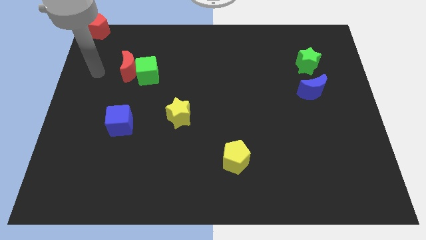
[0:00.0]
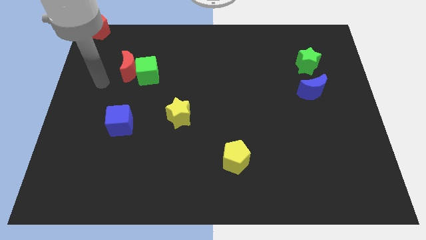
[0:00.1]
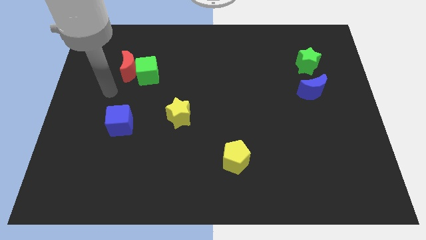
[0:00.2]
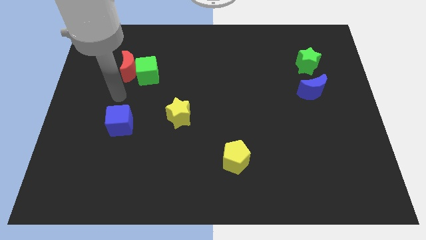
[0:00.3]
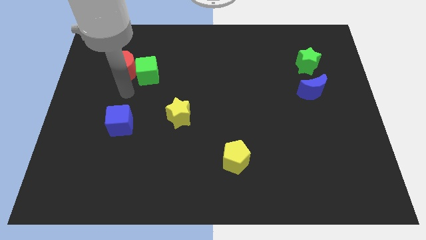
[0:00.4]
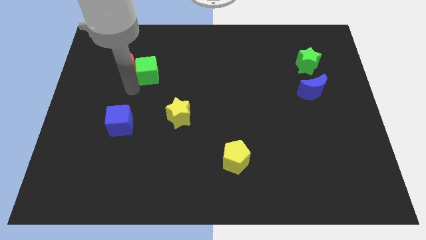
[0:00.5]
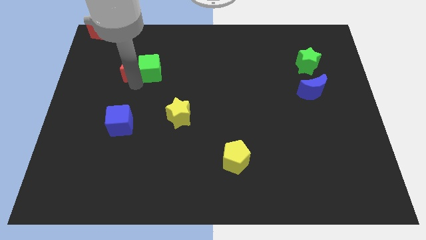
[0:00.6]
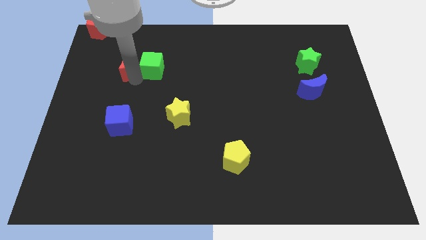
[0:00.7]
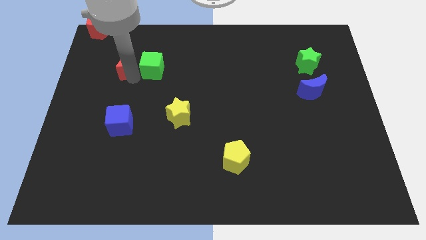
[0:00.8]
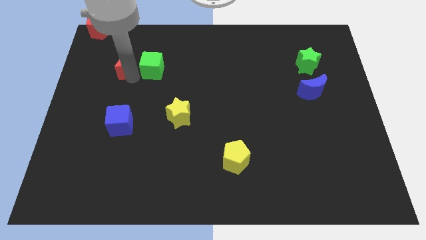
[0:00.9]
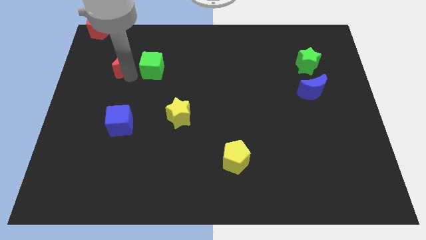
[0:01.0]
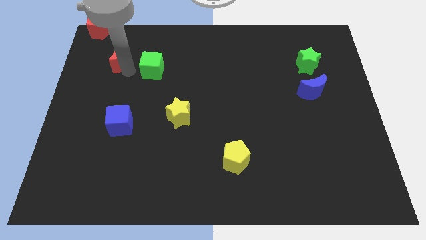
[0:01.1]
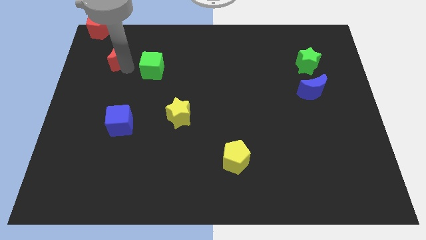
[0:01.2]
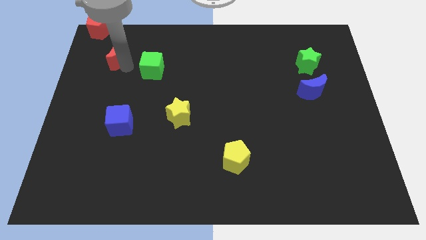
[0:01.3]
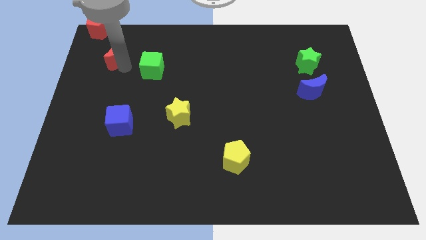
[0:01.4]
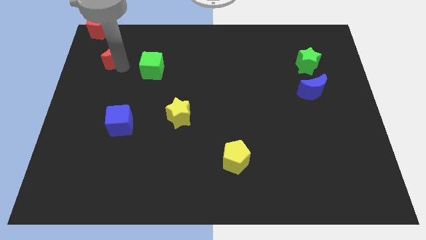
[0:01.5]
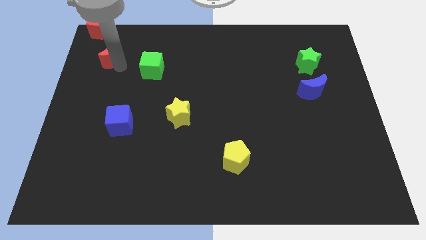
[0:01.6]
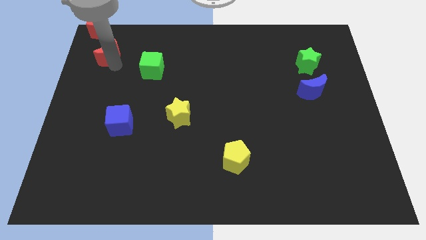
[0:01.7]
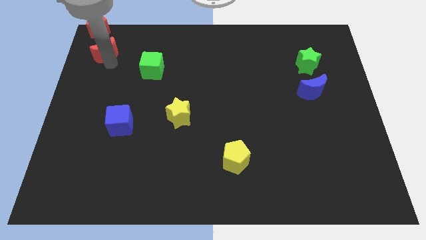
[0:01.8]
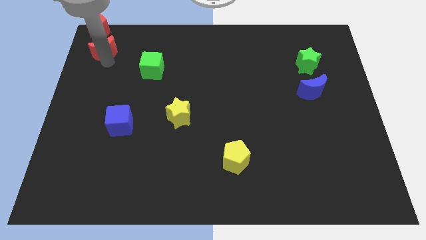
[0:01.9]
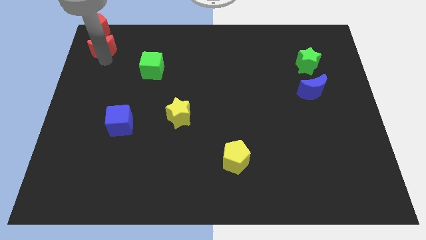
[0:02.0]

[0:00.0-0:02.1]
move the red moon into the red pentagon

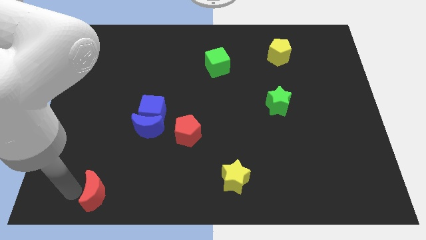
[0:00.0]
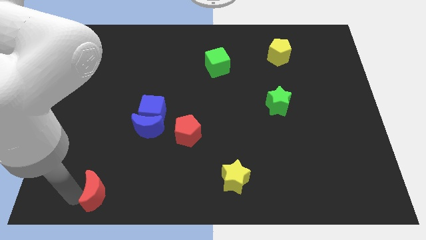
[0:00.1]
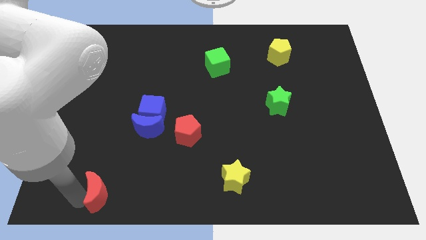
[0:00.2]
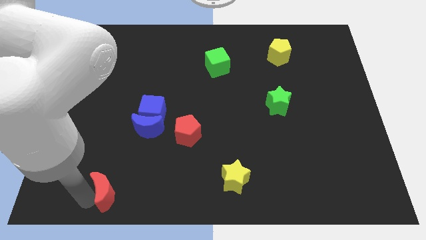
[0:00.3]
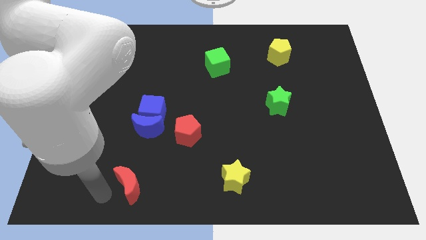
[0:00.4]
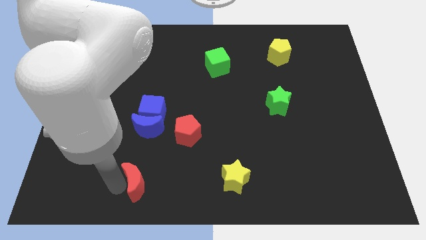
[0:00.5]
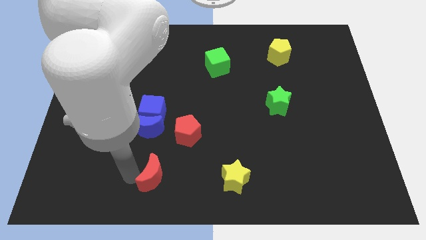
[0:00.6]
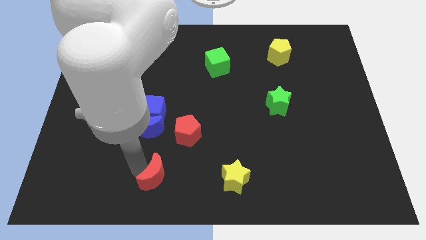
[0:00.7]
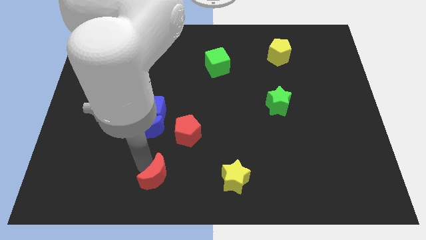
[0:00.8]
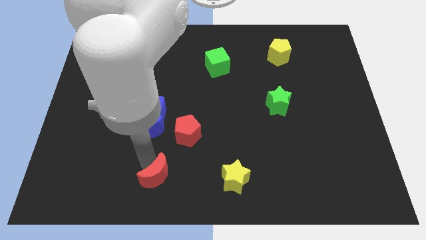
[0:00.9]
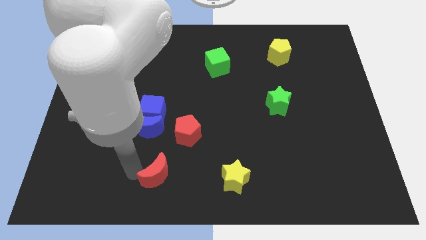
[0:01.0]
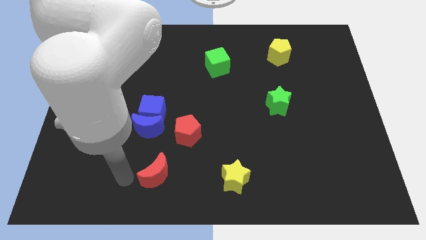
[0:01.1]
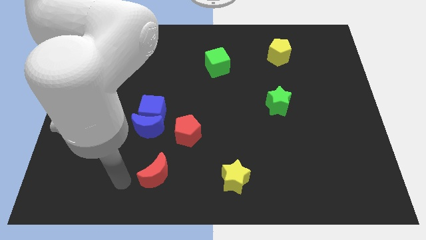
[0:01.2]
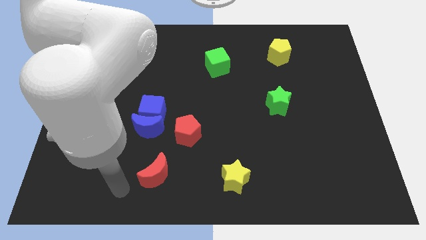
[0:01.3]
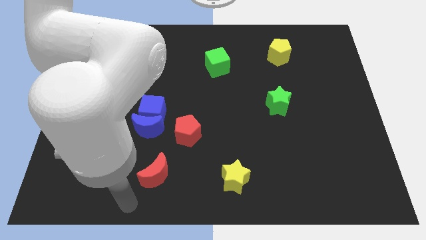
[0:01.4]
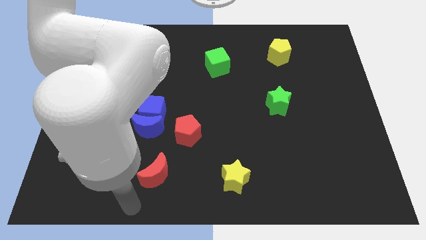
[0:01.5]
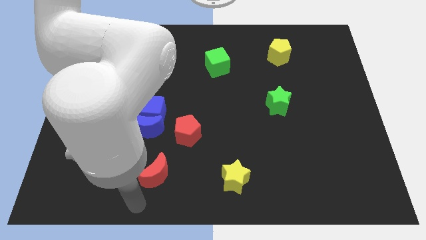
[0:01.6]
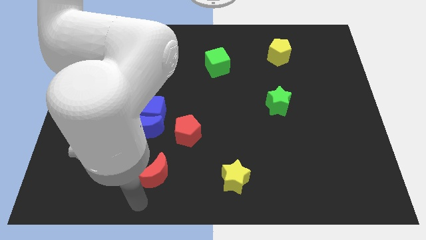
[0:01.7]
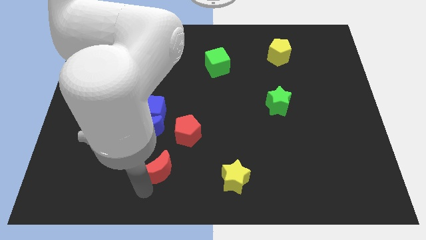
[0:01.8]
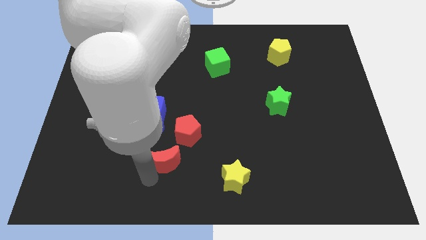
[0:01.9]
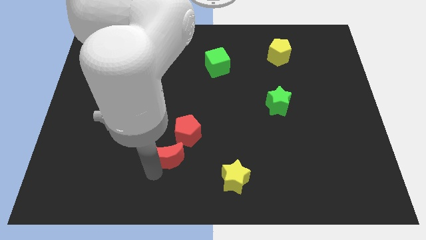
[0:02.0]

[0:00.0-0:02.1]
push red moon into red pentagon

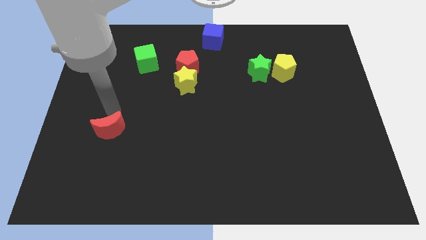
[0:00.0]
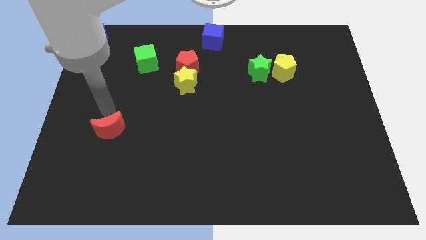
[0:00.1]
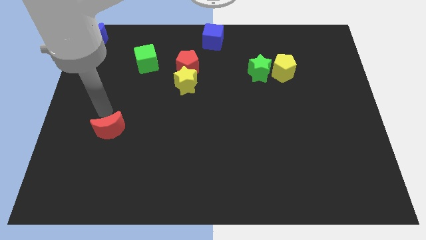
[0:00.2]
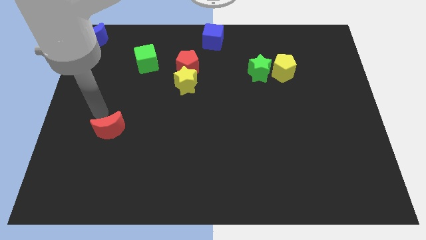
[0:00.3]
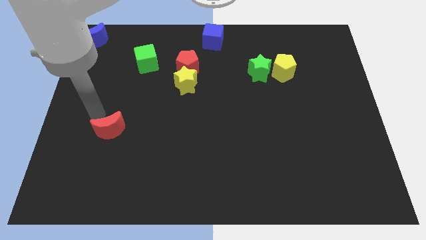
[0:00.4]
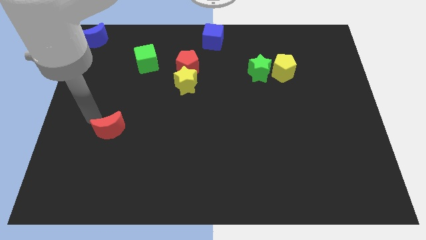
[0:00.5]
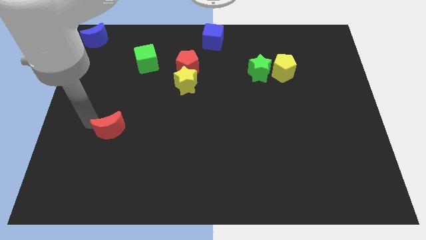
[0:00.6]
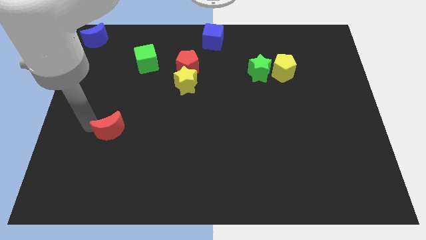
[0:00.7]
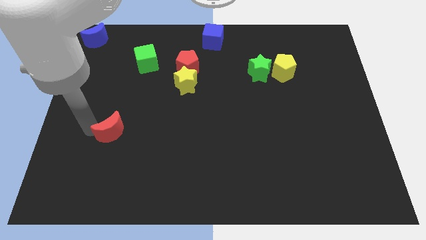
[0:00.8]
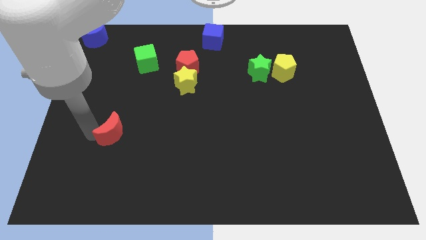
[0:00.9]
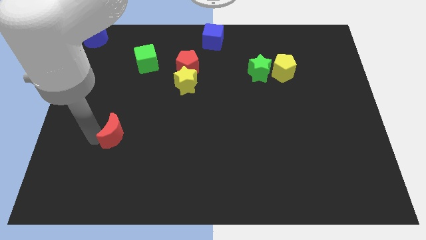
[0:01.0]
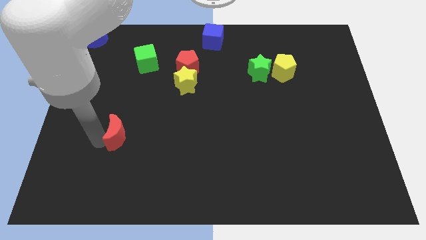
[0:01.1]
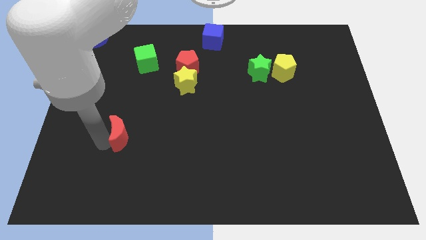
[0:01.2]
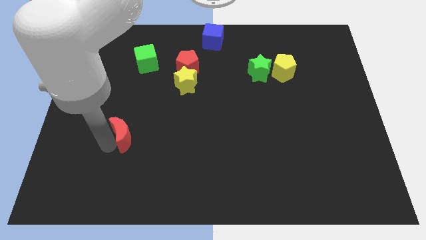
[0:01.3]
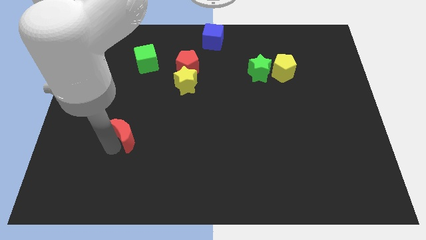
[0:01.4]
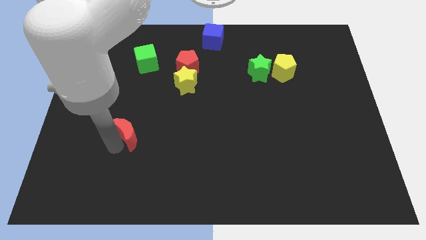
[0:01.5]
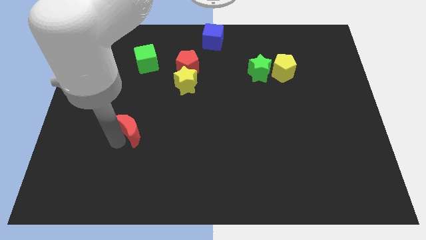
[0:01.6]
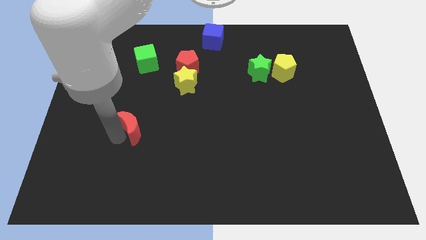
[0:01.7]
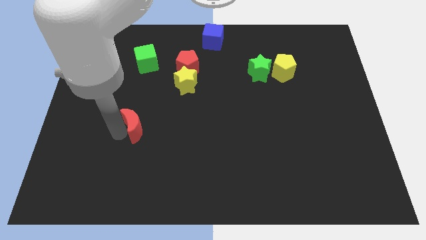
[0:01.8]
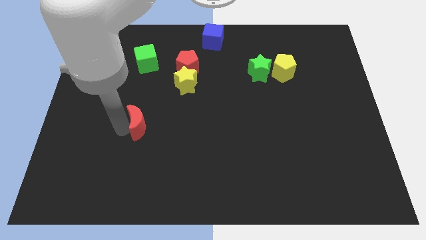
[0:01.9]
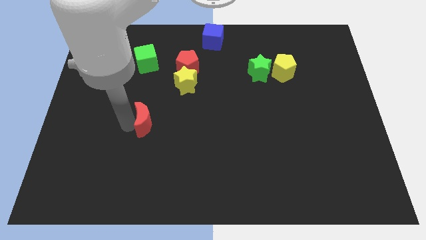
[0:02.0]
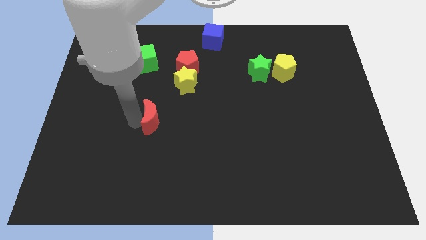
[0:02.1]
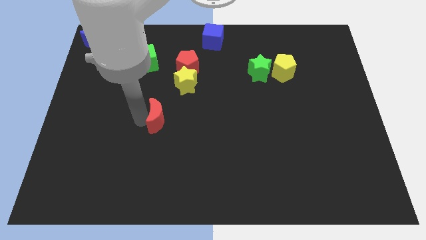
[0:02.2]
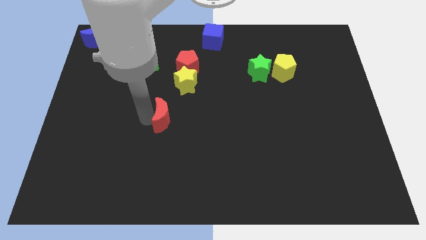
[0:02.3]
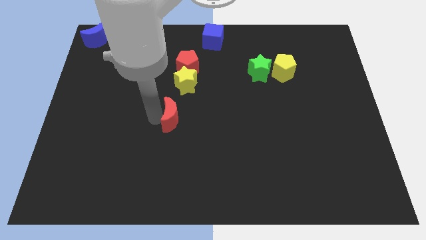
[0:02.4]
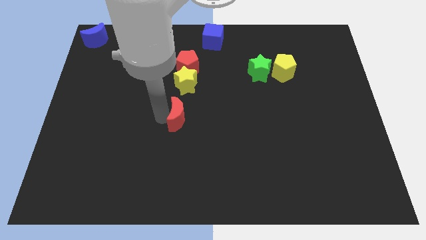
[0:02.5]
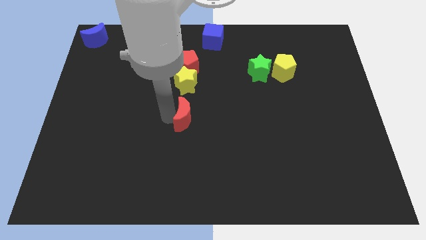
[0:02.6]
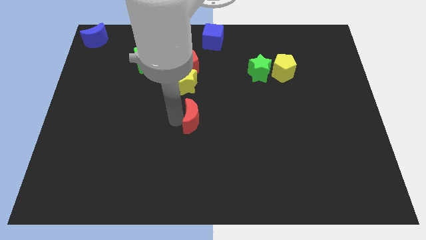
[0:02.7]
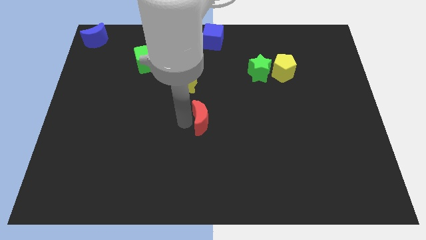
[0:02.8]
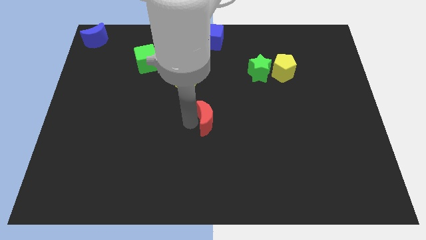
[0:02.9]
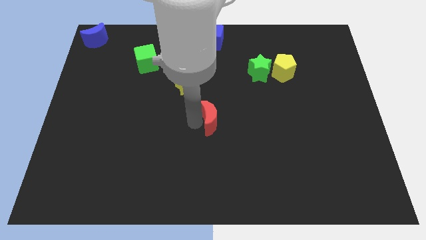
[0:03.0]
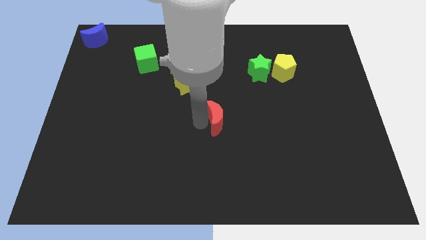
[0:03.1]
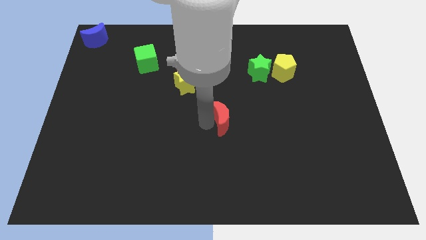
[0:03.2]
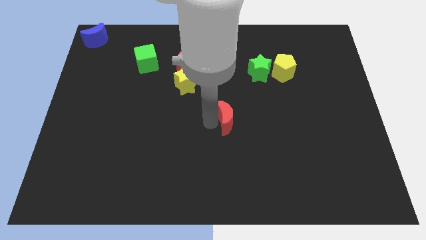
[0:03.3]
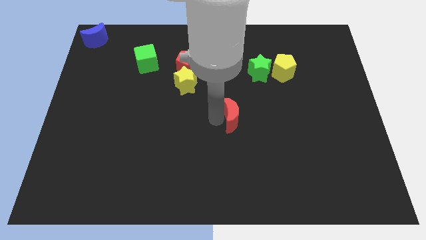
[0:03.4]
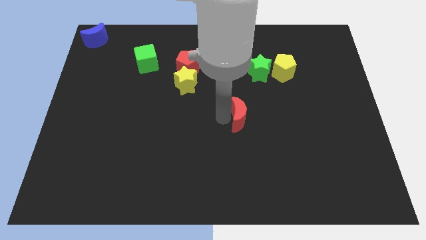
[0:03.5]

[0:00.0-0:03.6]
push the red crescent at the bottom right side of the yellow star

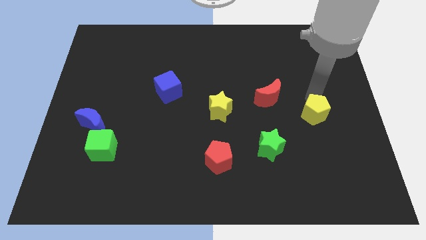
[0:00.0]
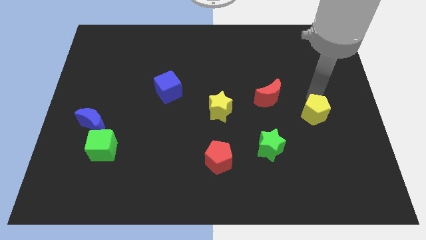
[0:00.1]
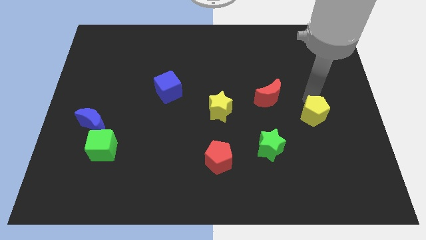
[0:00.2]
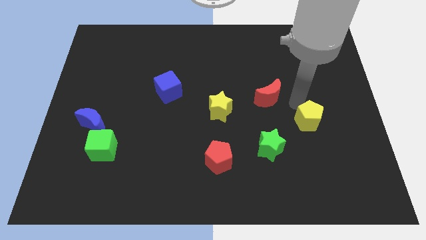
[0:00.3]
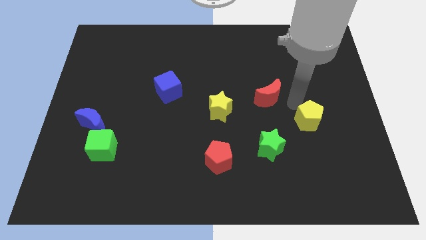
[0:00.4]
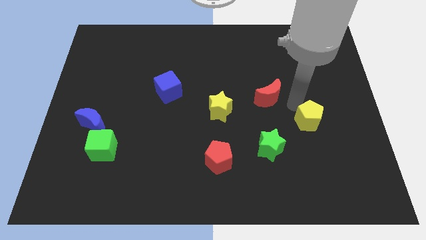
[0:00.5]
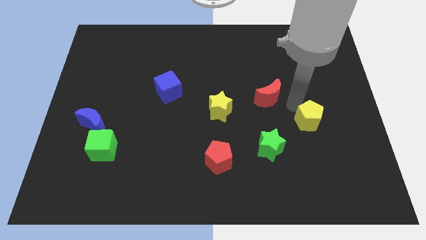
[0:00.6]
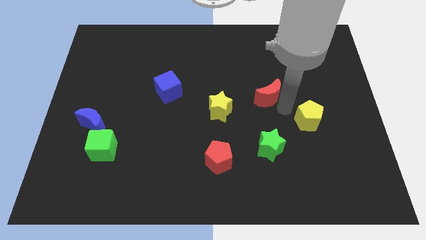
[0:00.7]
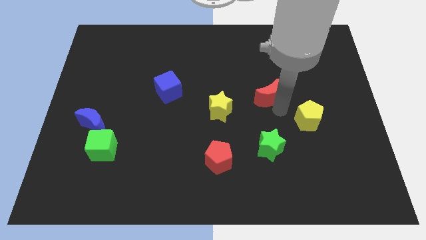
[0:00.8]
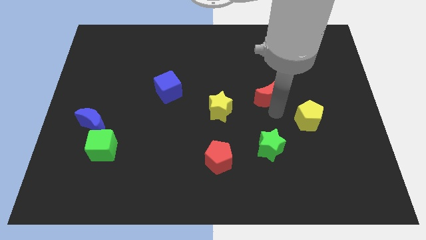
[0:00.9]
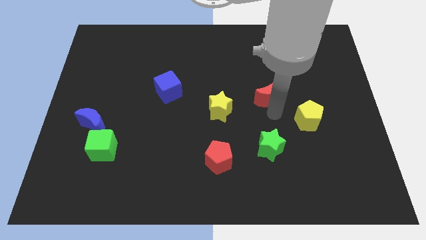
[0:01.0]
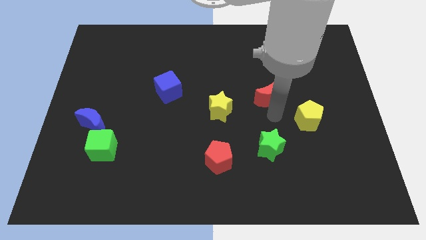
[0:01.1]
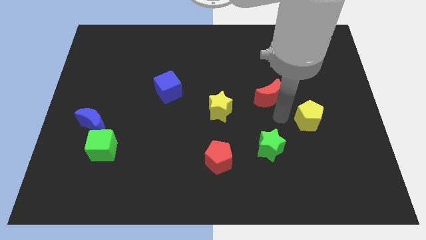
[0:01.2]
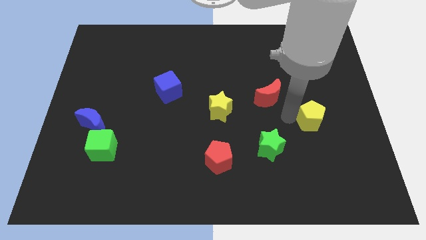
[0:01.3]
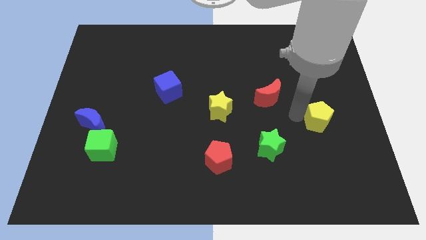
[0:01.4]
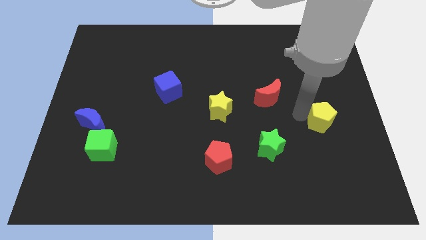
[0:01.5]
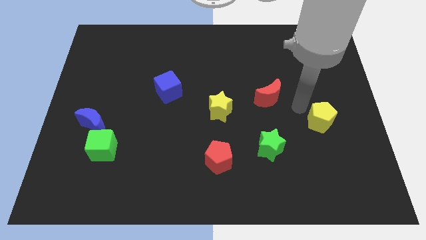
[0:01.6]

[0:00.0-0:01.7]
slightly push the yellow pentagon diagonally to the top right of the green star
